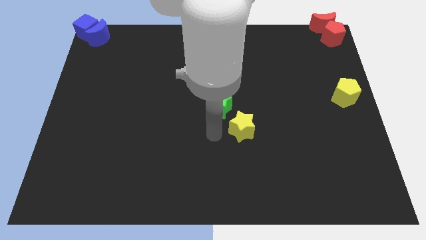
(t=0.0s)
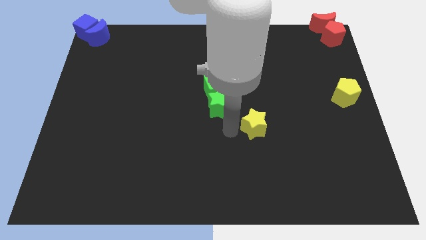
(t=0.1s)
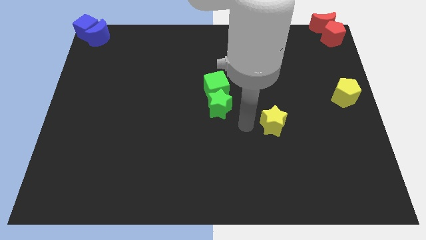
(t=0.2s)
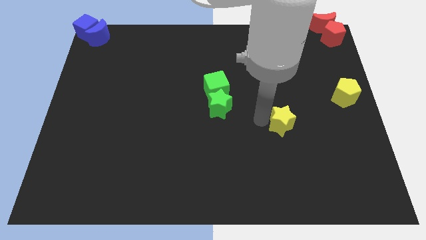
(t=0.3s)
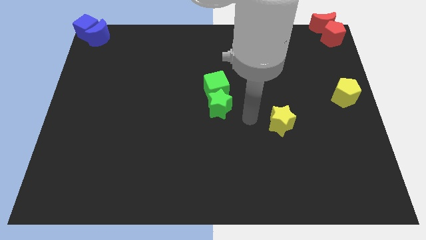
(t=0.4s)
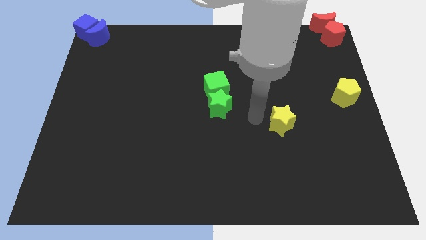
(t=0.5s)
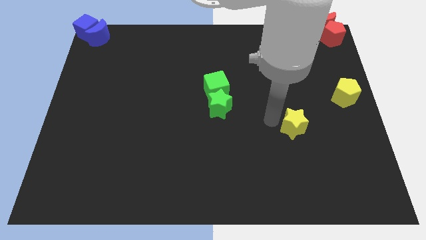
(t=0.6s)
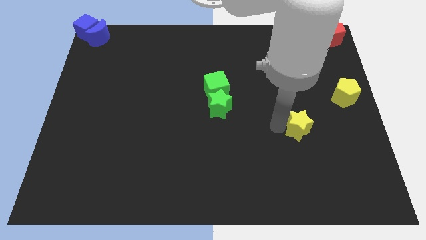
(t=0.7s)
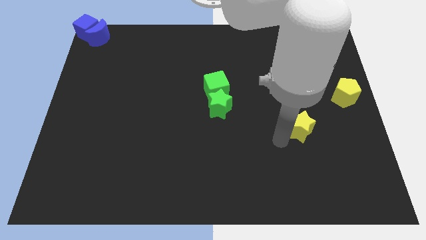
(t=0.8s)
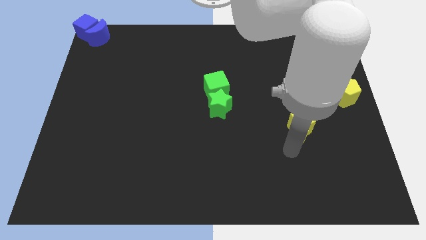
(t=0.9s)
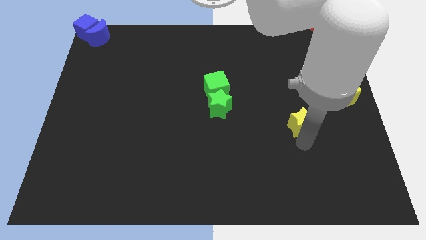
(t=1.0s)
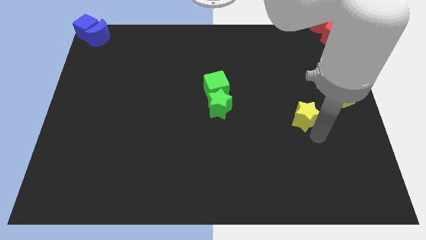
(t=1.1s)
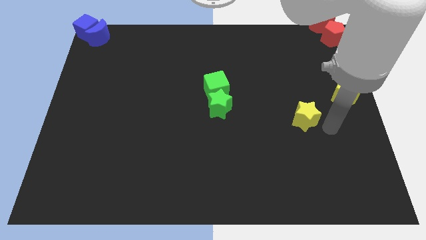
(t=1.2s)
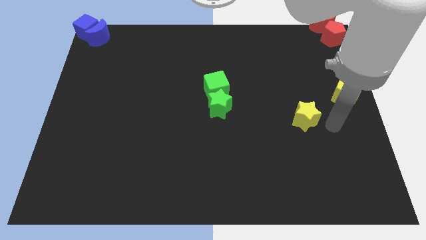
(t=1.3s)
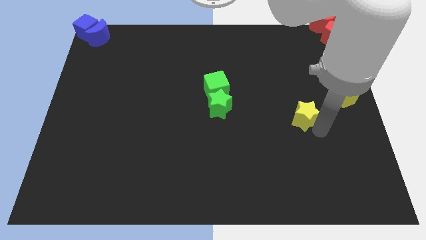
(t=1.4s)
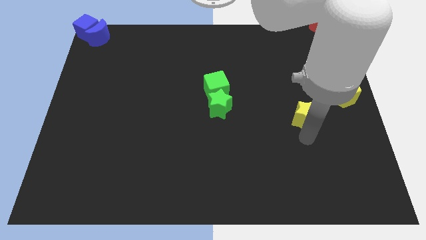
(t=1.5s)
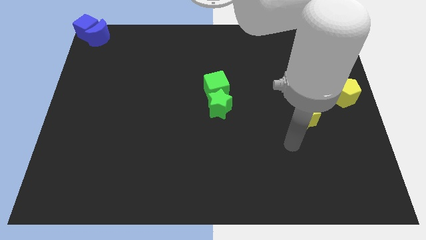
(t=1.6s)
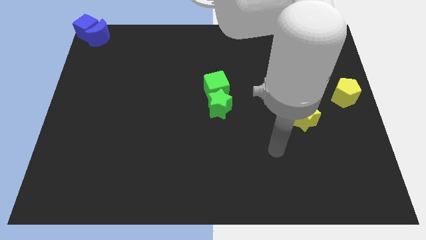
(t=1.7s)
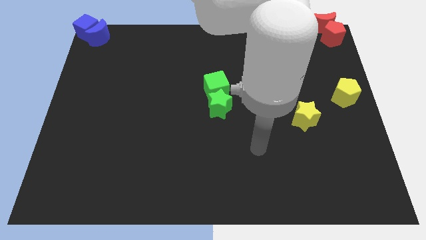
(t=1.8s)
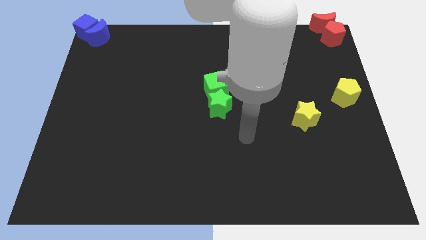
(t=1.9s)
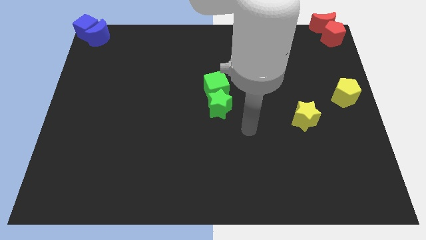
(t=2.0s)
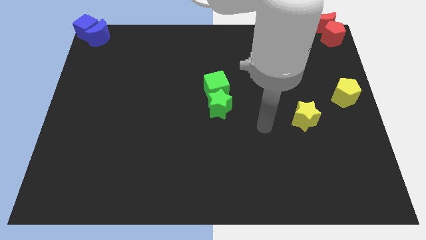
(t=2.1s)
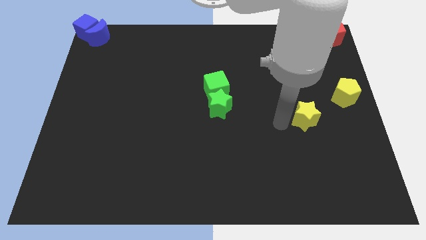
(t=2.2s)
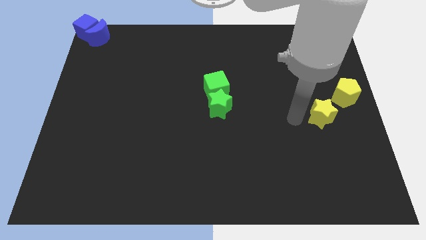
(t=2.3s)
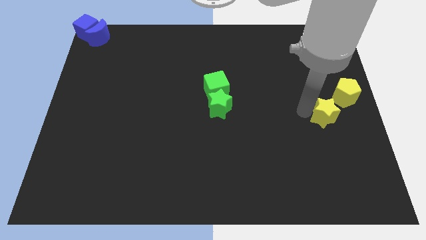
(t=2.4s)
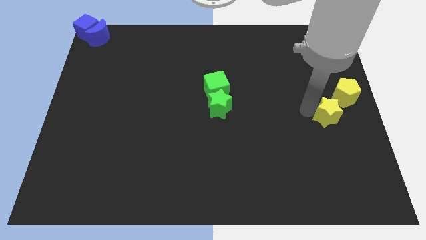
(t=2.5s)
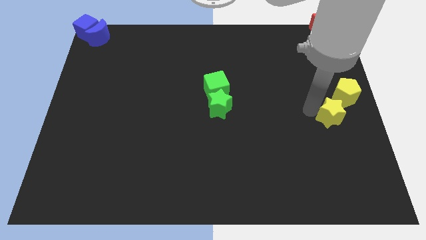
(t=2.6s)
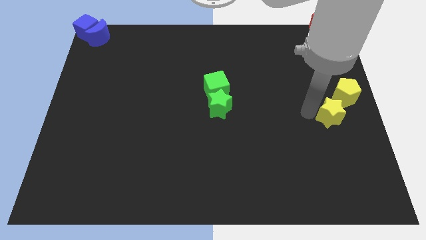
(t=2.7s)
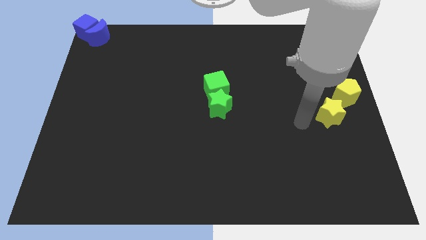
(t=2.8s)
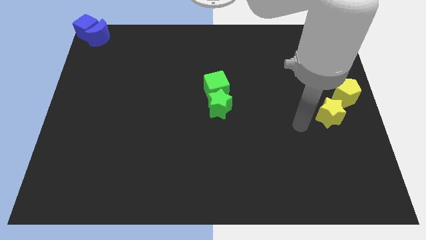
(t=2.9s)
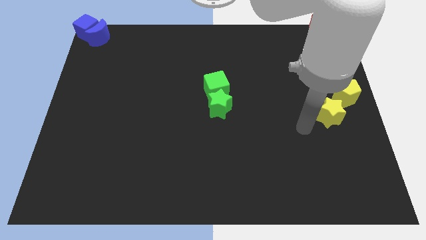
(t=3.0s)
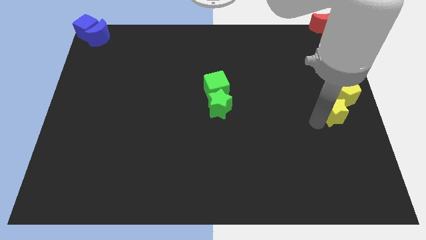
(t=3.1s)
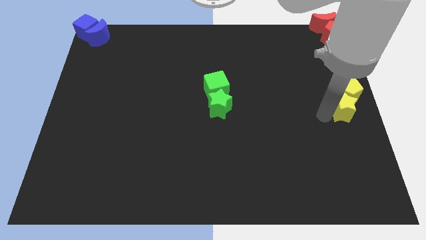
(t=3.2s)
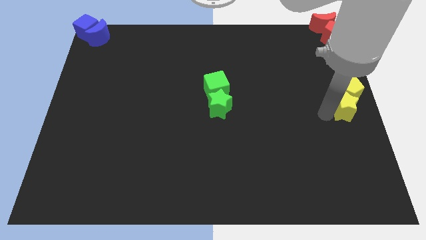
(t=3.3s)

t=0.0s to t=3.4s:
move the yellow star into the yellow pentagon to the center right

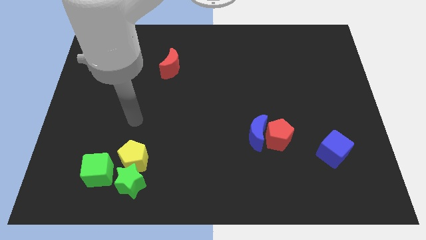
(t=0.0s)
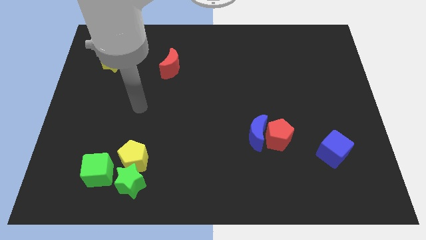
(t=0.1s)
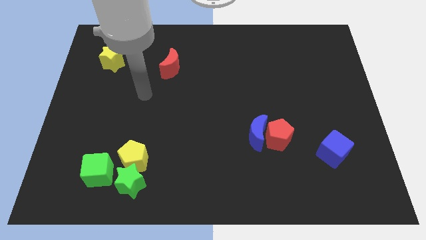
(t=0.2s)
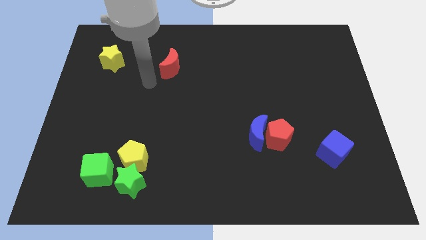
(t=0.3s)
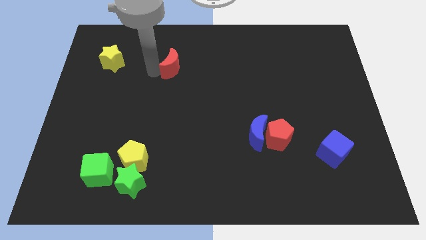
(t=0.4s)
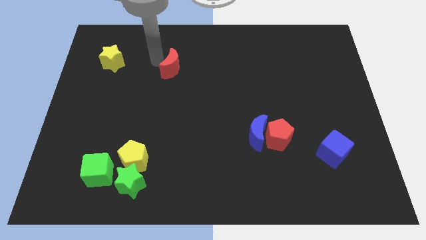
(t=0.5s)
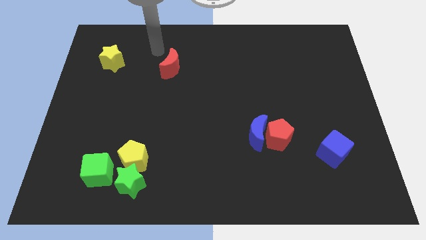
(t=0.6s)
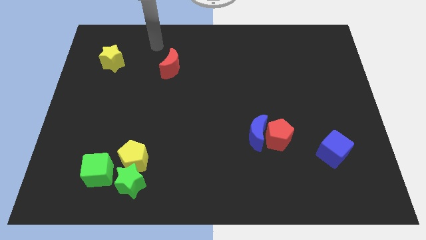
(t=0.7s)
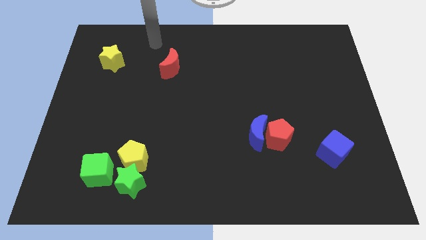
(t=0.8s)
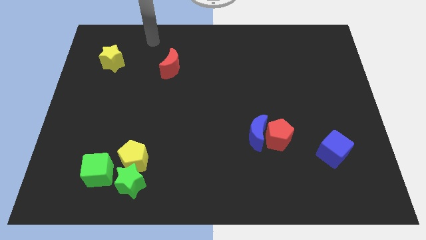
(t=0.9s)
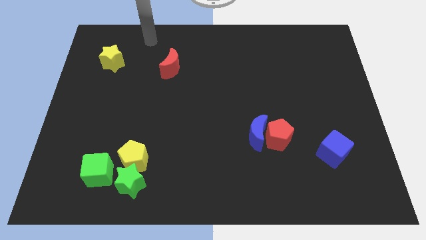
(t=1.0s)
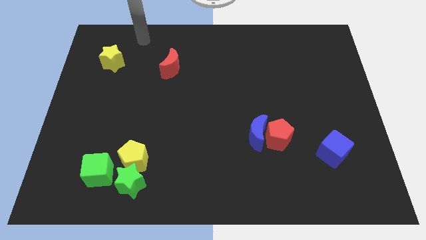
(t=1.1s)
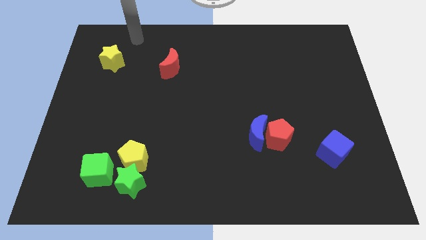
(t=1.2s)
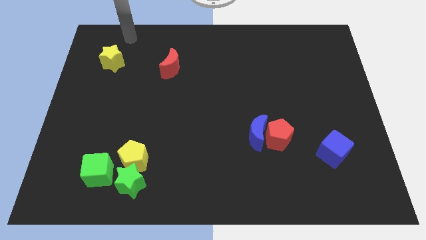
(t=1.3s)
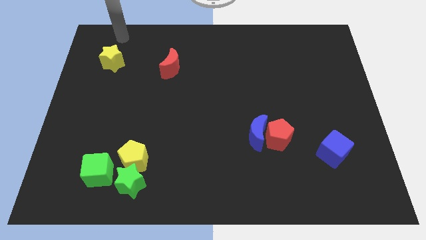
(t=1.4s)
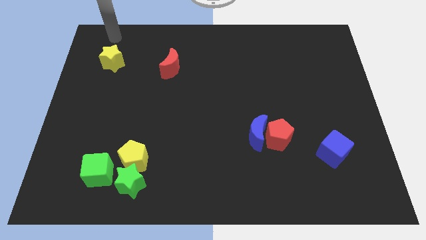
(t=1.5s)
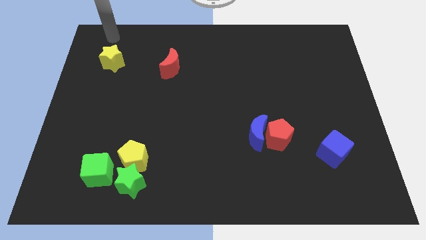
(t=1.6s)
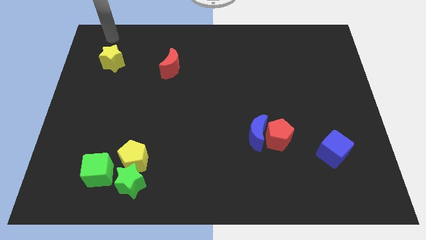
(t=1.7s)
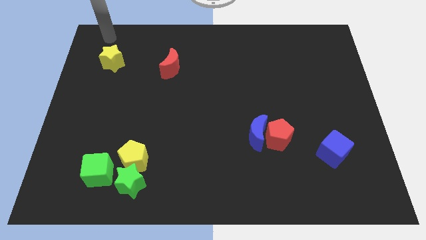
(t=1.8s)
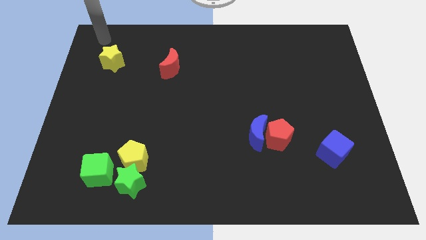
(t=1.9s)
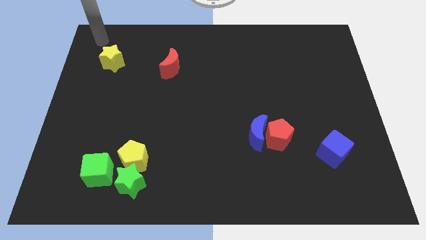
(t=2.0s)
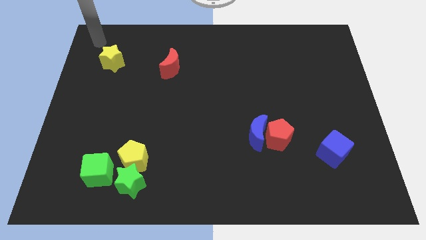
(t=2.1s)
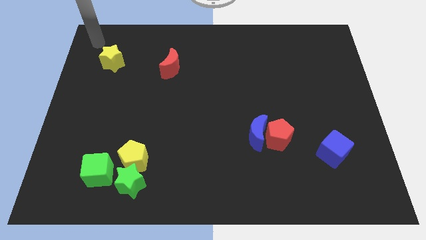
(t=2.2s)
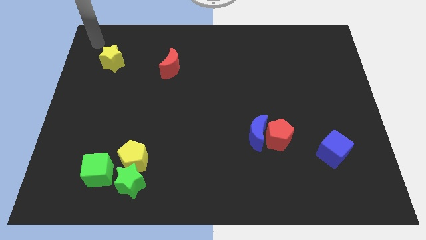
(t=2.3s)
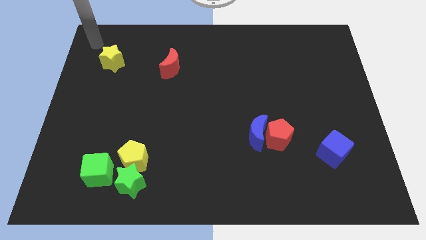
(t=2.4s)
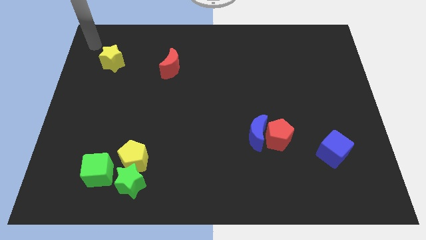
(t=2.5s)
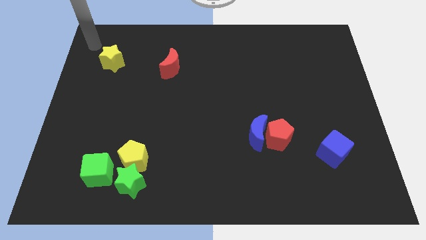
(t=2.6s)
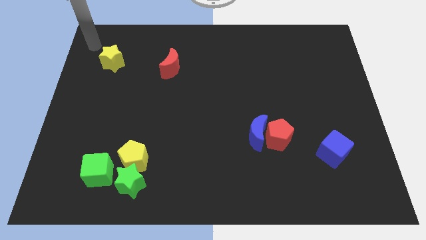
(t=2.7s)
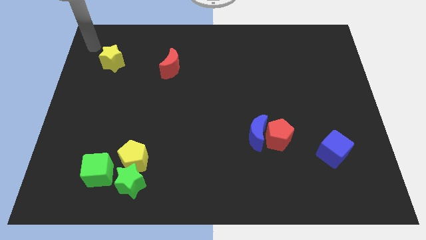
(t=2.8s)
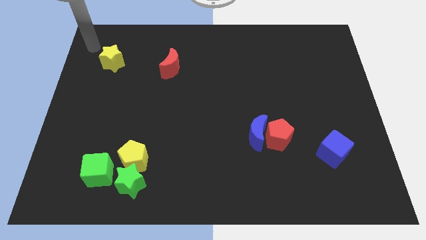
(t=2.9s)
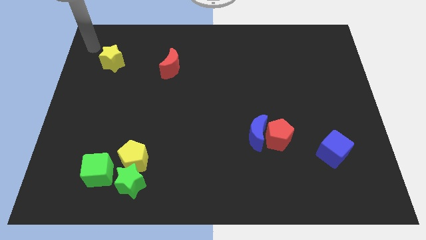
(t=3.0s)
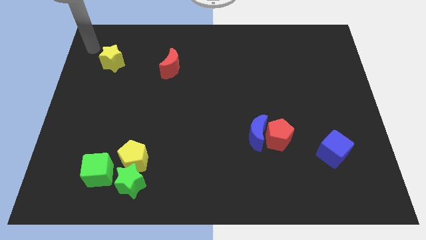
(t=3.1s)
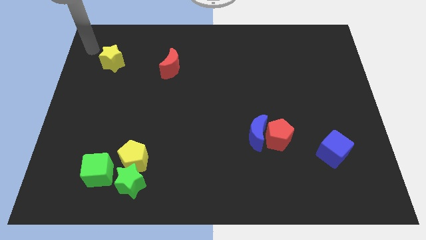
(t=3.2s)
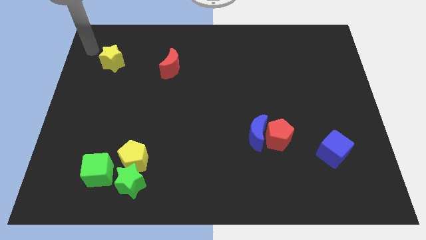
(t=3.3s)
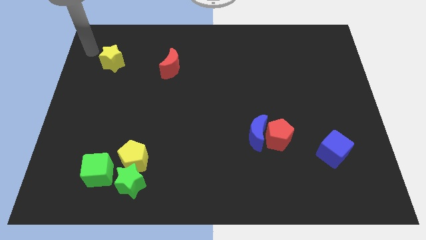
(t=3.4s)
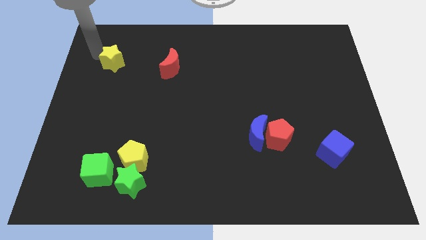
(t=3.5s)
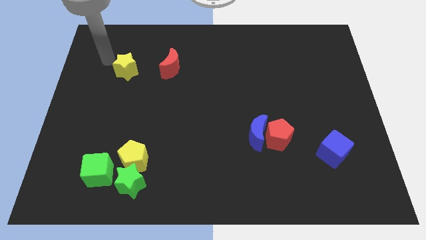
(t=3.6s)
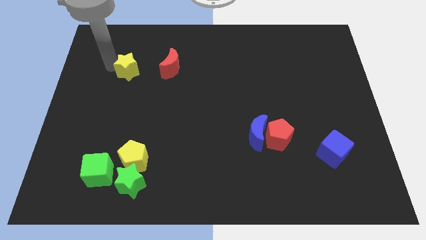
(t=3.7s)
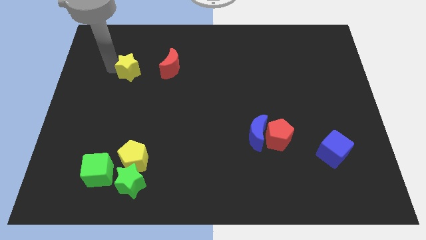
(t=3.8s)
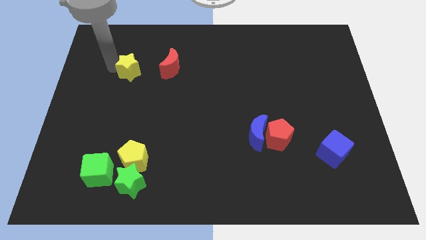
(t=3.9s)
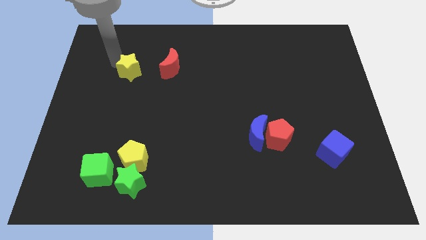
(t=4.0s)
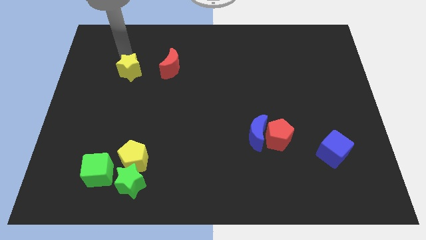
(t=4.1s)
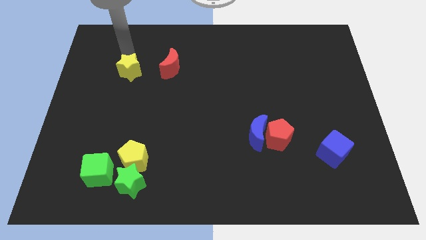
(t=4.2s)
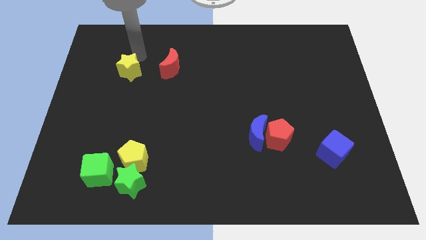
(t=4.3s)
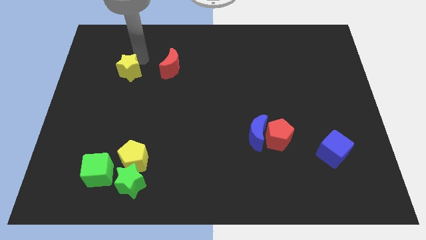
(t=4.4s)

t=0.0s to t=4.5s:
push the yellow star to the left of the red crescent

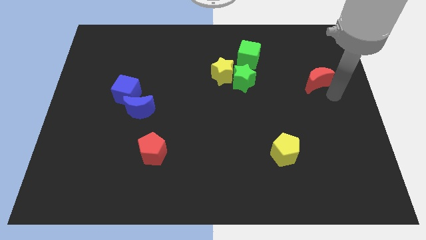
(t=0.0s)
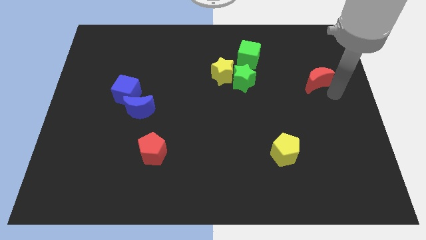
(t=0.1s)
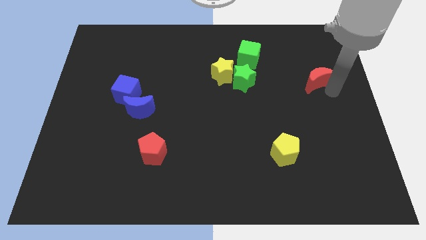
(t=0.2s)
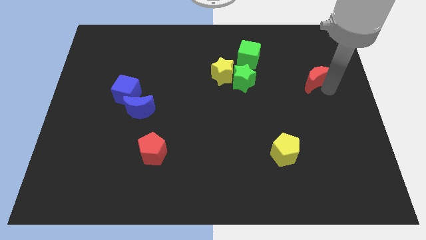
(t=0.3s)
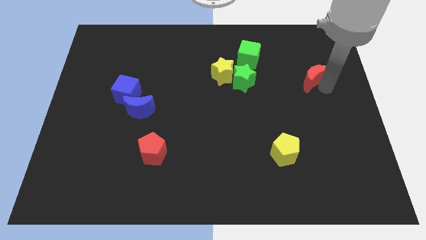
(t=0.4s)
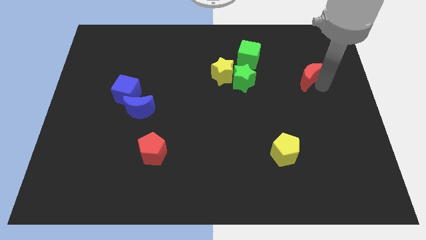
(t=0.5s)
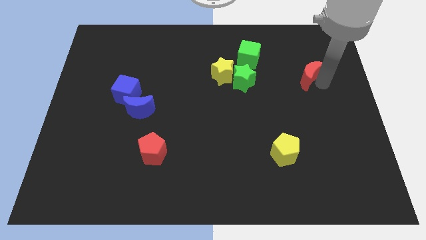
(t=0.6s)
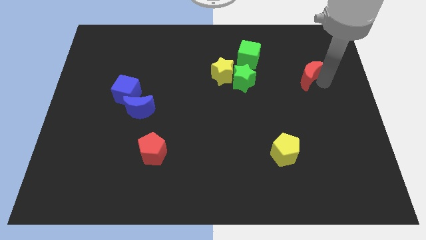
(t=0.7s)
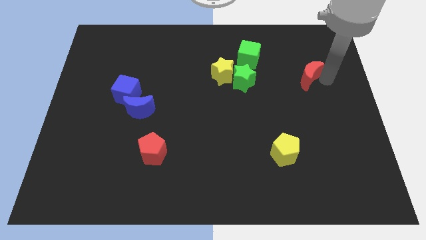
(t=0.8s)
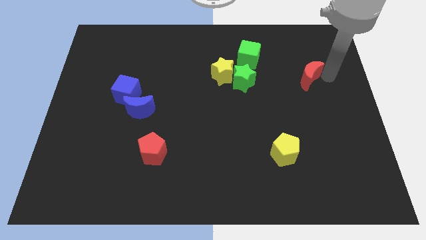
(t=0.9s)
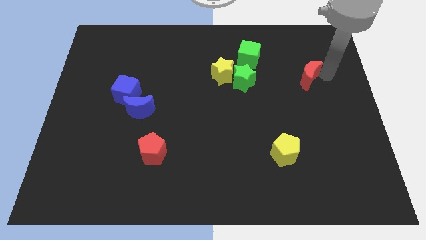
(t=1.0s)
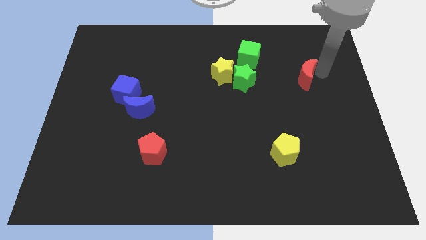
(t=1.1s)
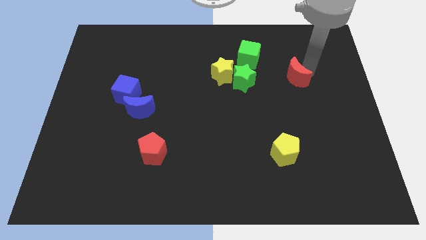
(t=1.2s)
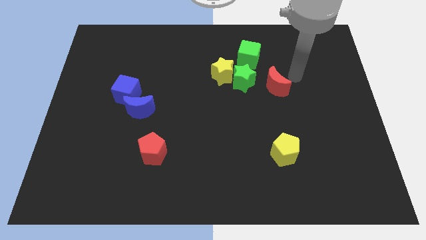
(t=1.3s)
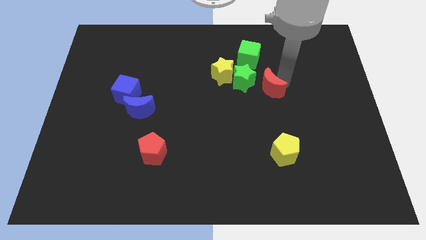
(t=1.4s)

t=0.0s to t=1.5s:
move the red crescent above the yellow pentagon
